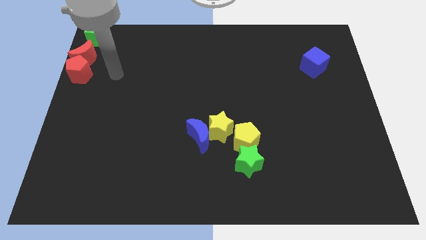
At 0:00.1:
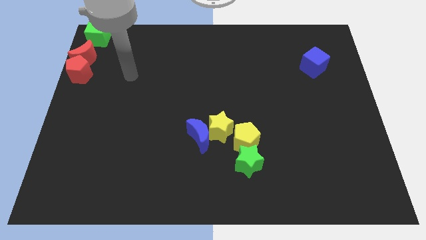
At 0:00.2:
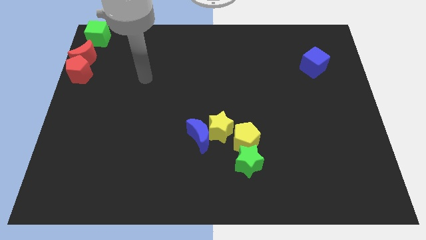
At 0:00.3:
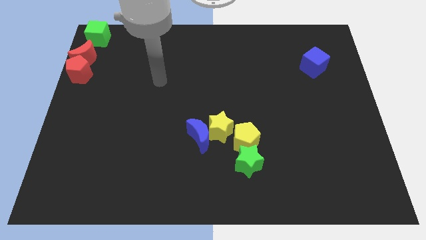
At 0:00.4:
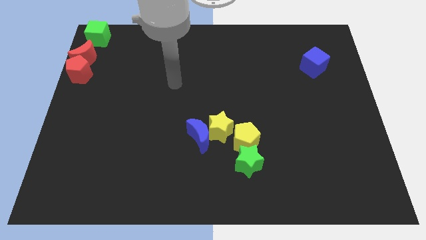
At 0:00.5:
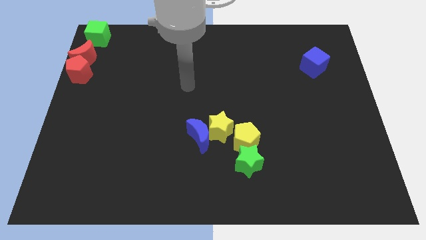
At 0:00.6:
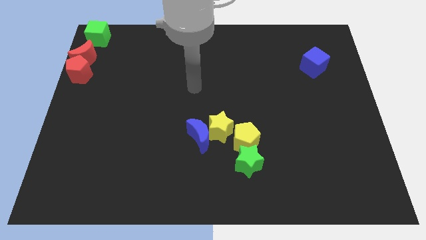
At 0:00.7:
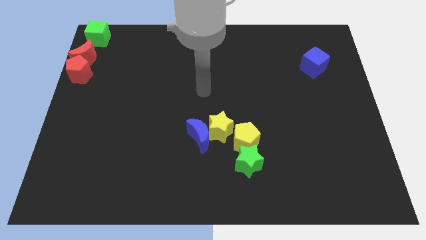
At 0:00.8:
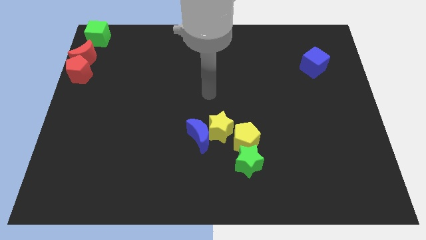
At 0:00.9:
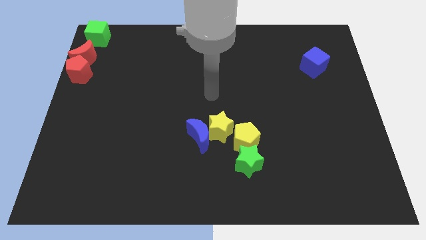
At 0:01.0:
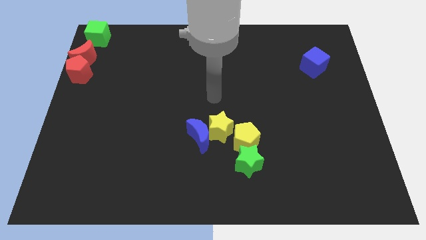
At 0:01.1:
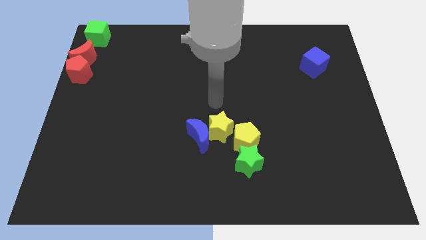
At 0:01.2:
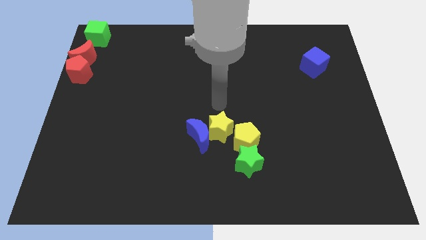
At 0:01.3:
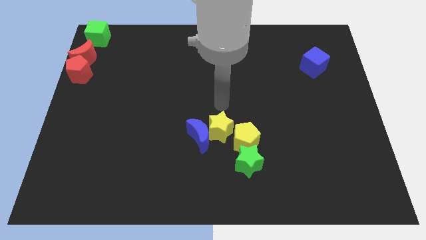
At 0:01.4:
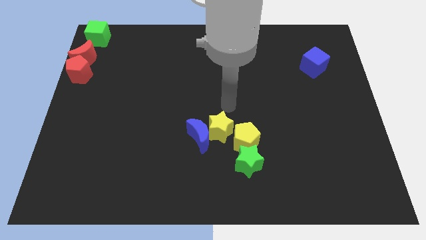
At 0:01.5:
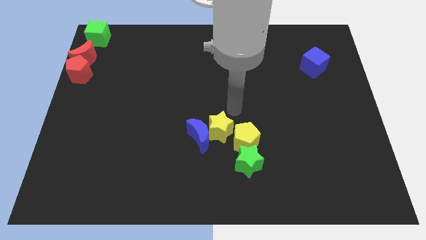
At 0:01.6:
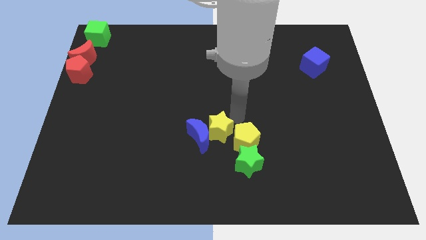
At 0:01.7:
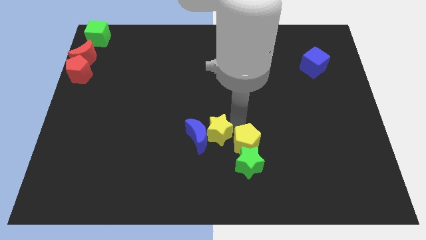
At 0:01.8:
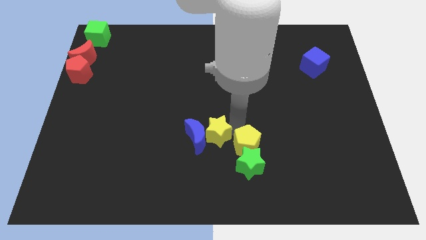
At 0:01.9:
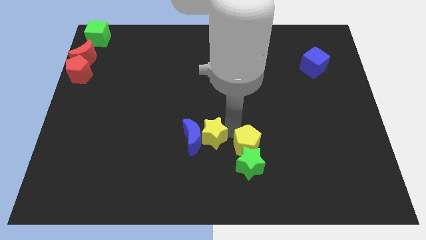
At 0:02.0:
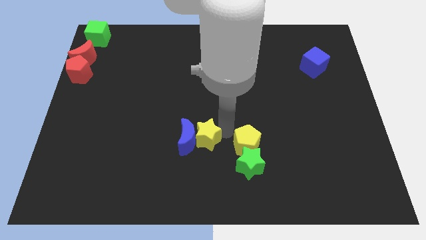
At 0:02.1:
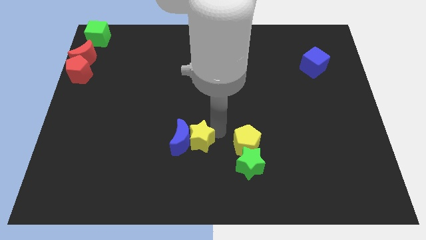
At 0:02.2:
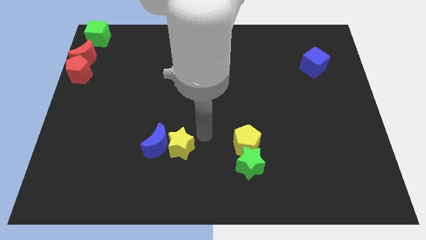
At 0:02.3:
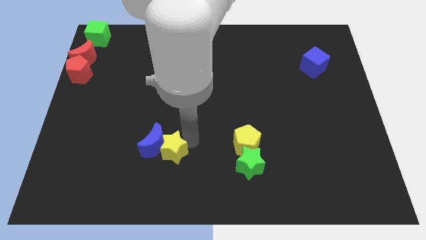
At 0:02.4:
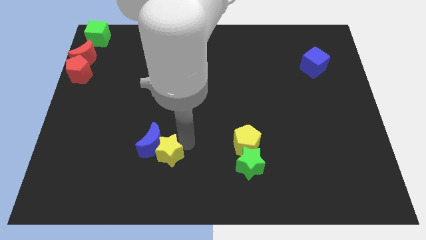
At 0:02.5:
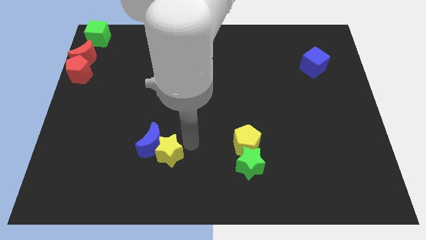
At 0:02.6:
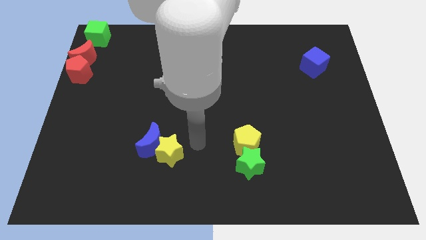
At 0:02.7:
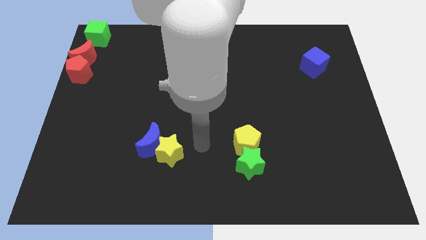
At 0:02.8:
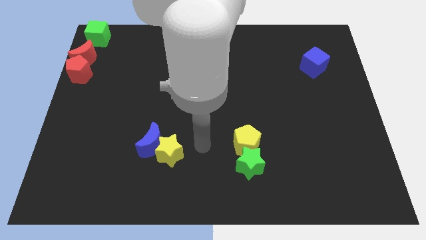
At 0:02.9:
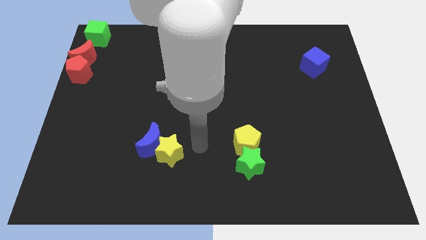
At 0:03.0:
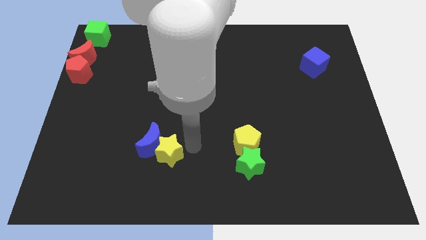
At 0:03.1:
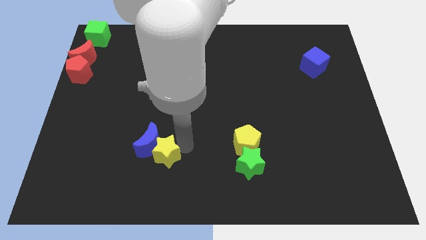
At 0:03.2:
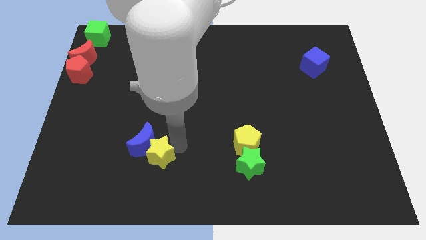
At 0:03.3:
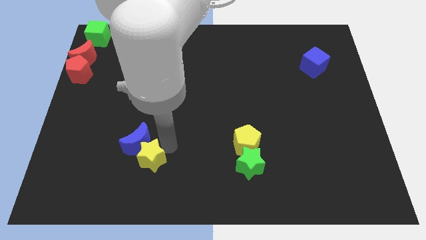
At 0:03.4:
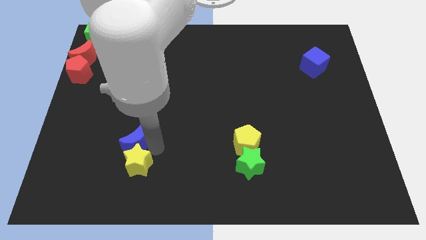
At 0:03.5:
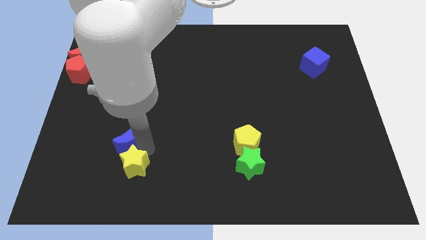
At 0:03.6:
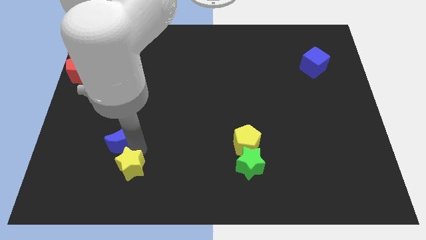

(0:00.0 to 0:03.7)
move the blue crescent and the yellow star slightly to the left

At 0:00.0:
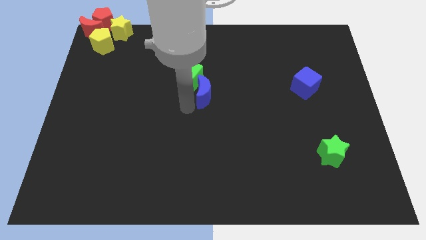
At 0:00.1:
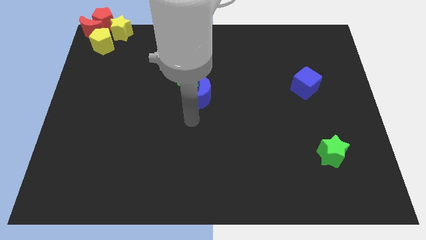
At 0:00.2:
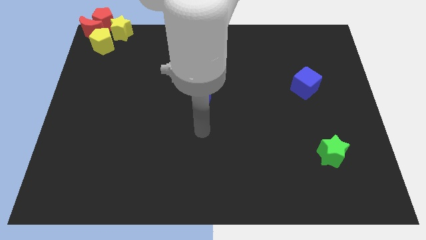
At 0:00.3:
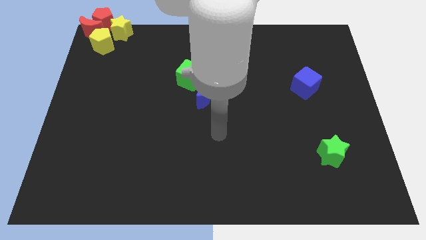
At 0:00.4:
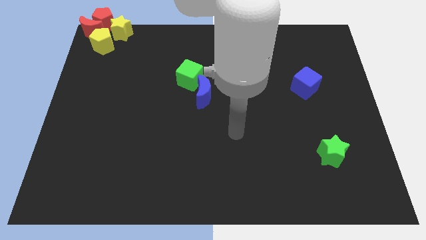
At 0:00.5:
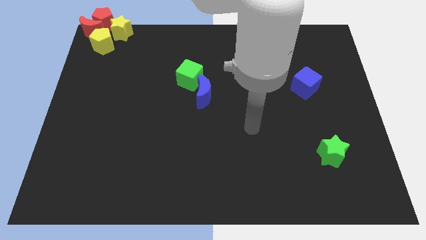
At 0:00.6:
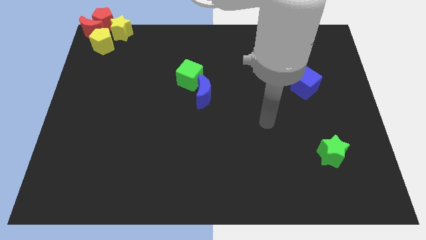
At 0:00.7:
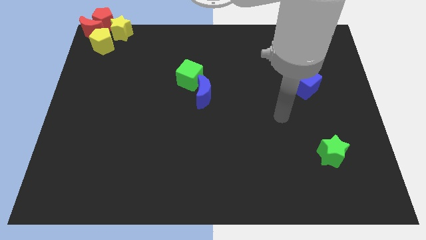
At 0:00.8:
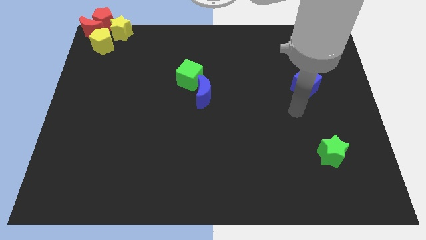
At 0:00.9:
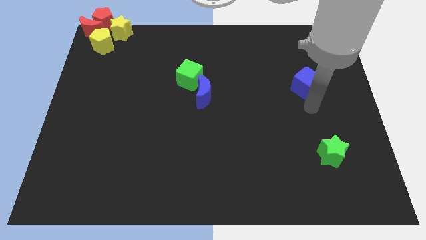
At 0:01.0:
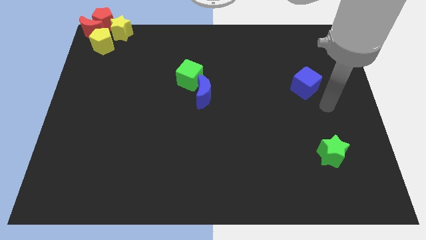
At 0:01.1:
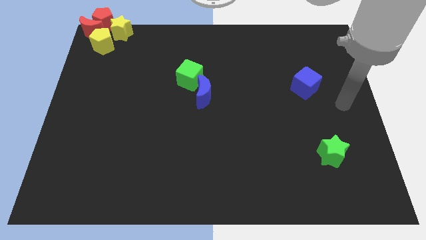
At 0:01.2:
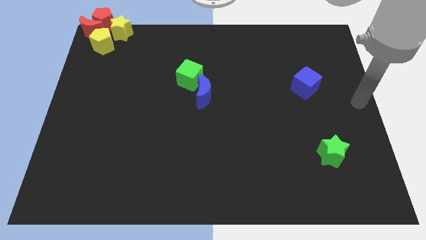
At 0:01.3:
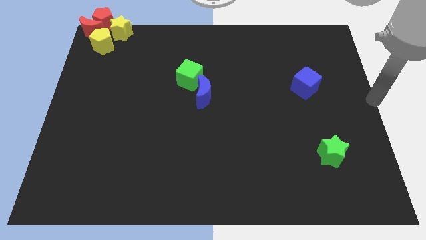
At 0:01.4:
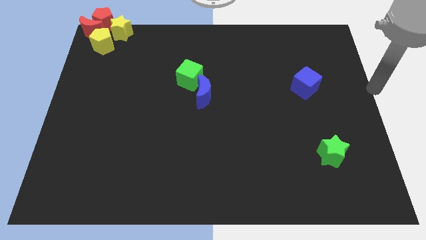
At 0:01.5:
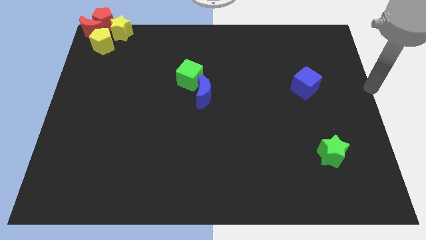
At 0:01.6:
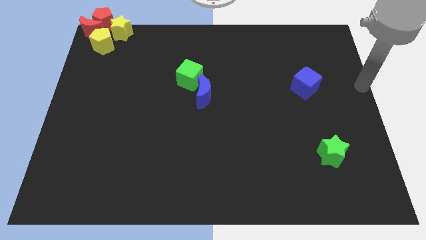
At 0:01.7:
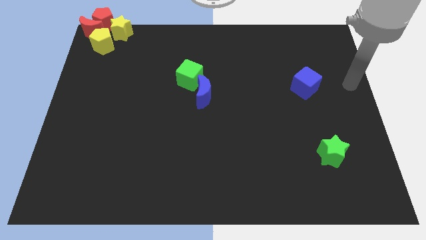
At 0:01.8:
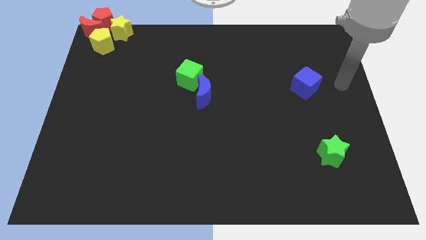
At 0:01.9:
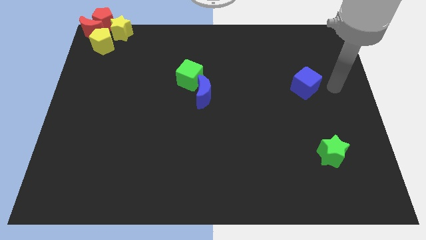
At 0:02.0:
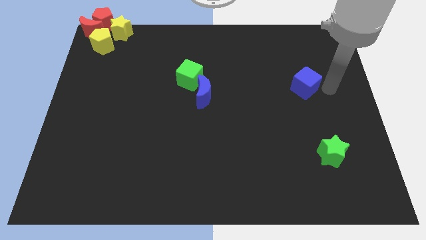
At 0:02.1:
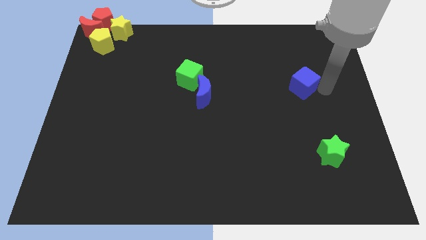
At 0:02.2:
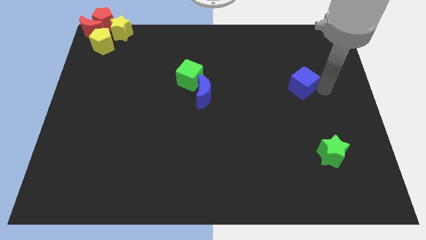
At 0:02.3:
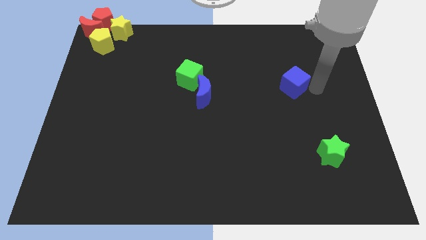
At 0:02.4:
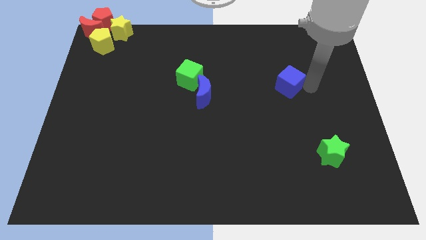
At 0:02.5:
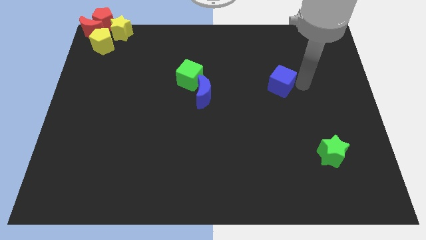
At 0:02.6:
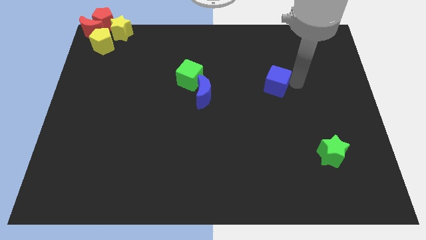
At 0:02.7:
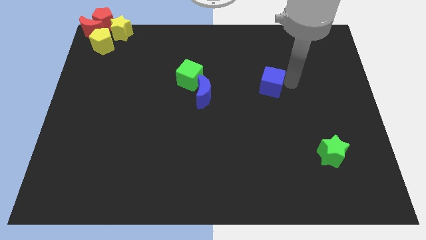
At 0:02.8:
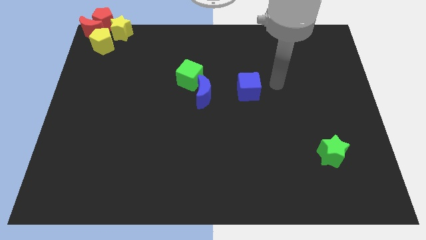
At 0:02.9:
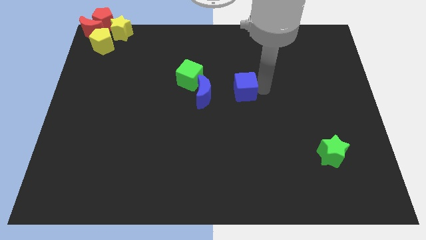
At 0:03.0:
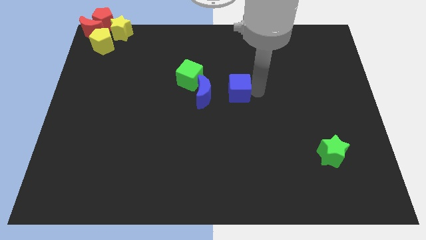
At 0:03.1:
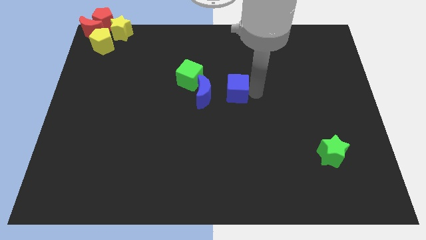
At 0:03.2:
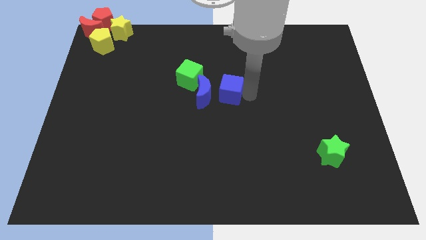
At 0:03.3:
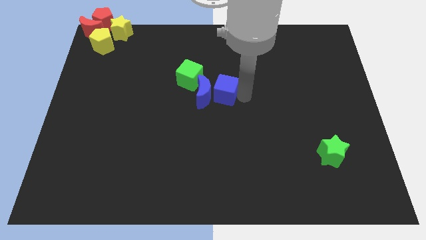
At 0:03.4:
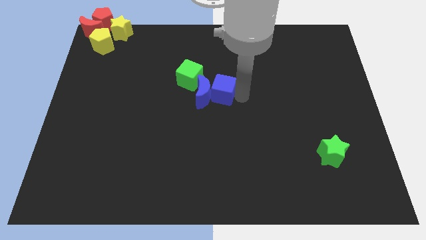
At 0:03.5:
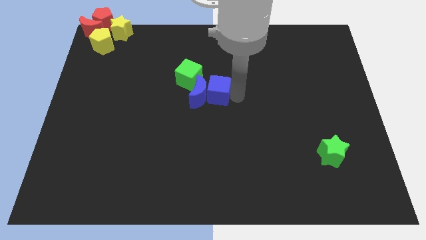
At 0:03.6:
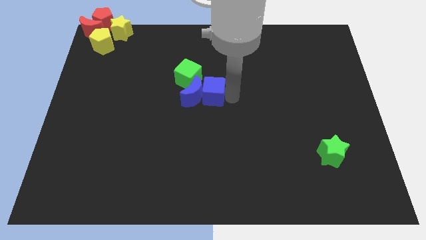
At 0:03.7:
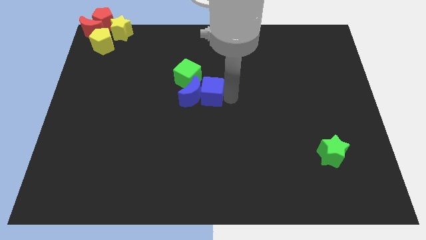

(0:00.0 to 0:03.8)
push the blue cube into the blue crescent

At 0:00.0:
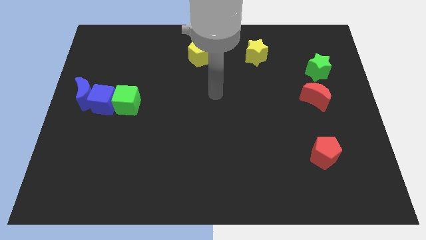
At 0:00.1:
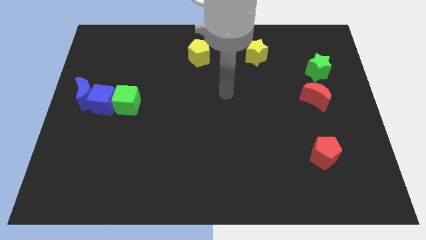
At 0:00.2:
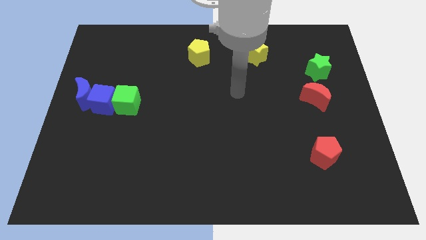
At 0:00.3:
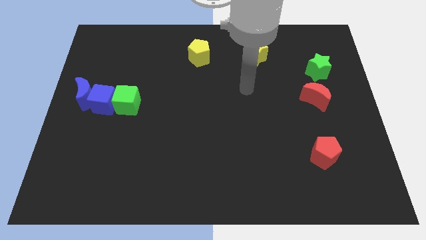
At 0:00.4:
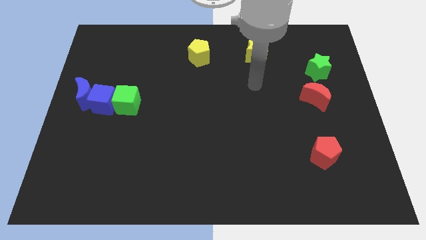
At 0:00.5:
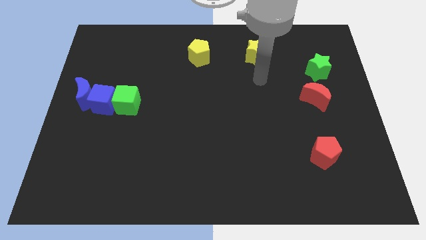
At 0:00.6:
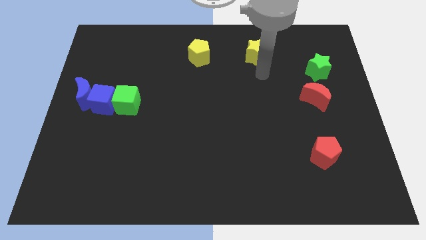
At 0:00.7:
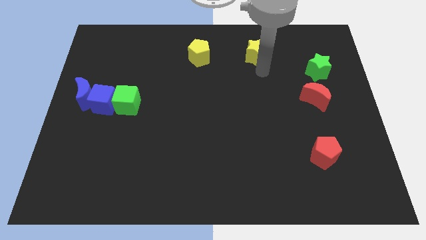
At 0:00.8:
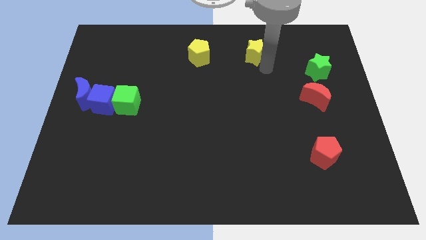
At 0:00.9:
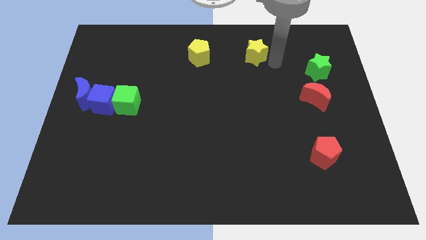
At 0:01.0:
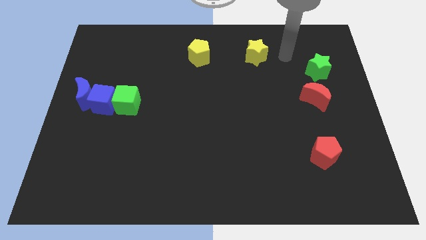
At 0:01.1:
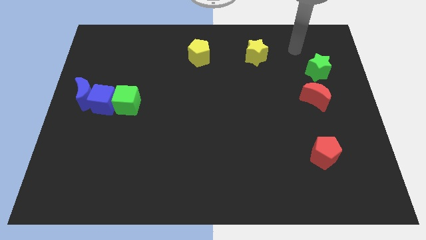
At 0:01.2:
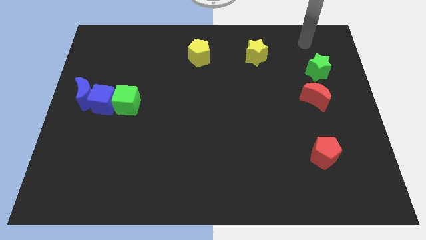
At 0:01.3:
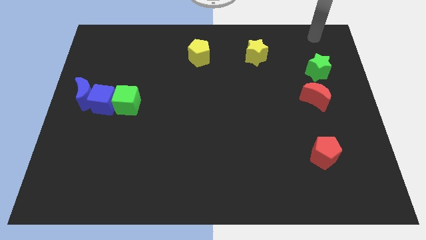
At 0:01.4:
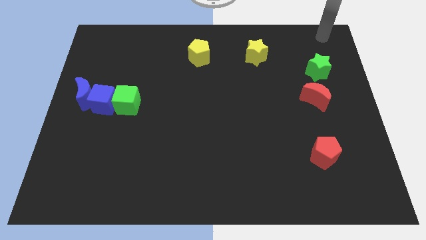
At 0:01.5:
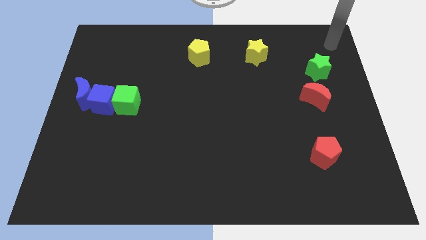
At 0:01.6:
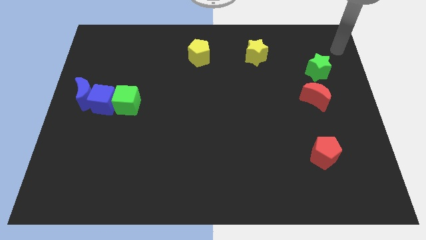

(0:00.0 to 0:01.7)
move your arm to the top right of the board
